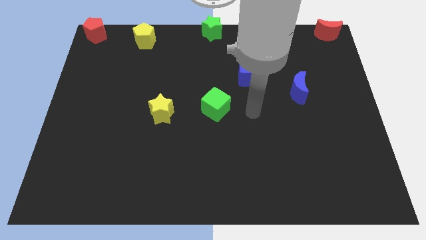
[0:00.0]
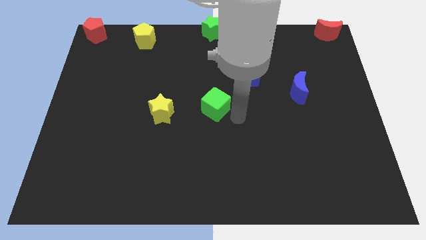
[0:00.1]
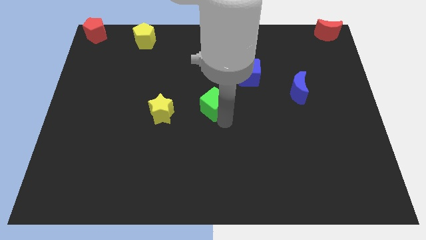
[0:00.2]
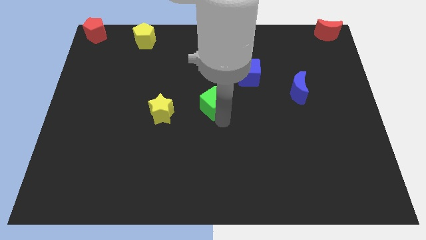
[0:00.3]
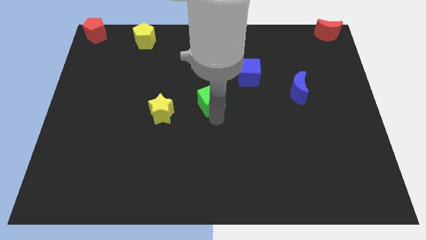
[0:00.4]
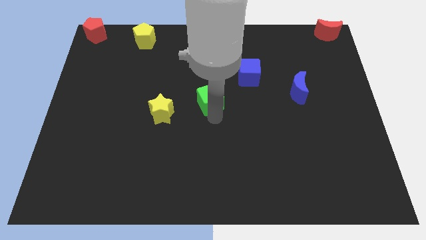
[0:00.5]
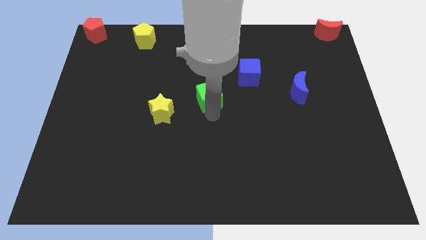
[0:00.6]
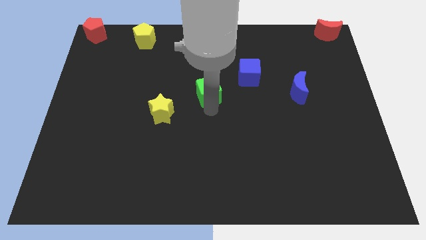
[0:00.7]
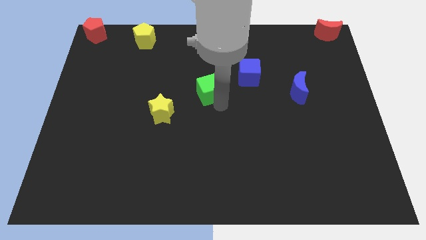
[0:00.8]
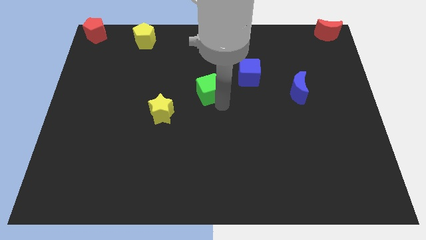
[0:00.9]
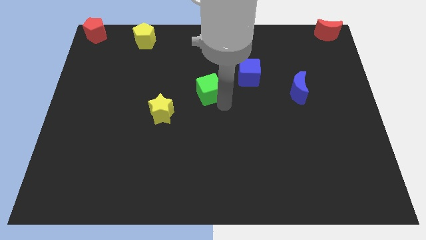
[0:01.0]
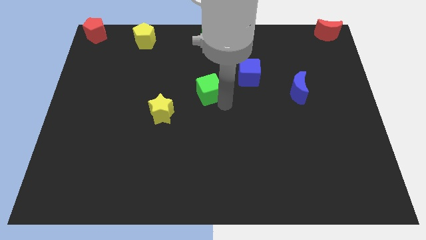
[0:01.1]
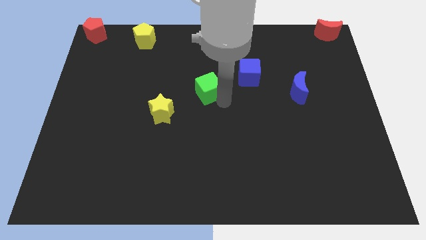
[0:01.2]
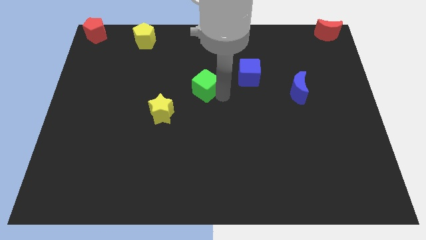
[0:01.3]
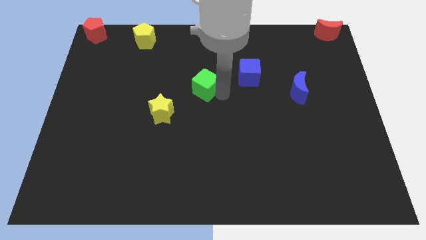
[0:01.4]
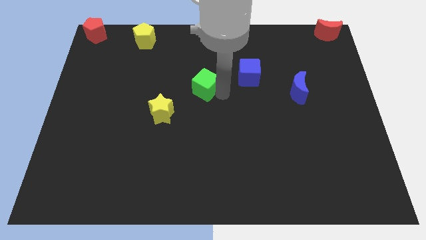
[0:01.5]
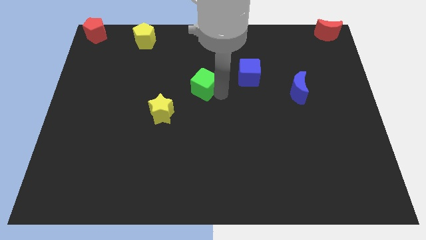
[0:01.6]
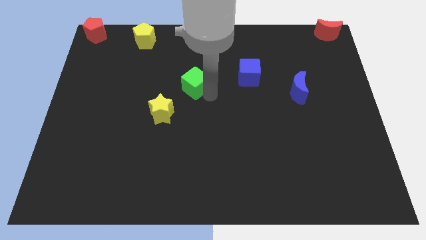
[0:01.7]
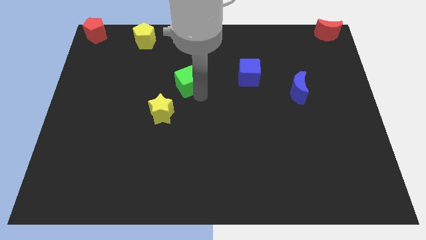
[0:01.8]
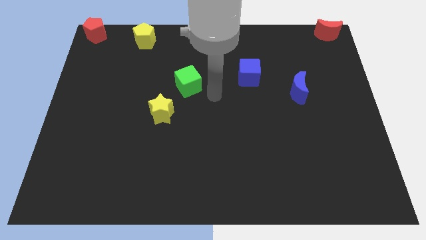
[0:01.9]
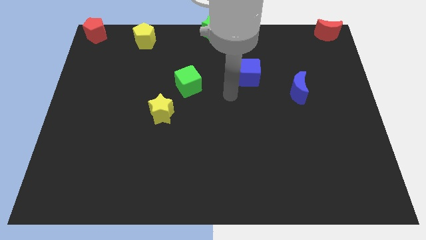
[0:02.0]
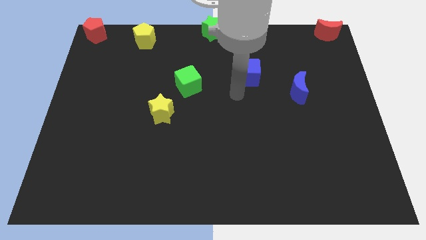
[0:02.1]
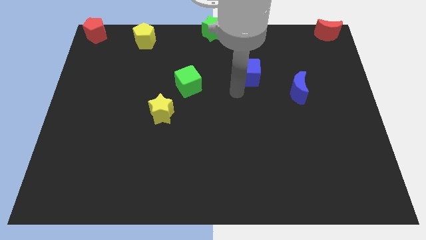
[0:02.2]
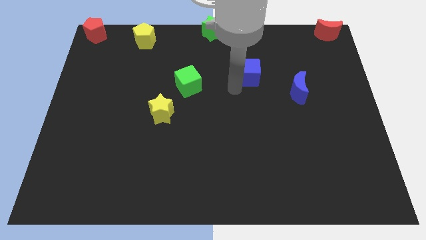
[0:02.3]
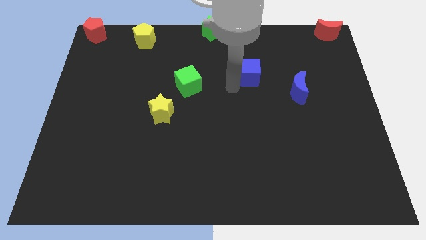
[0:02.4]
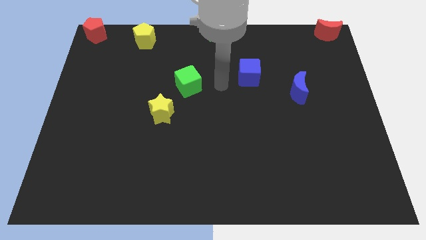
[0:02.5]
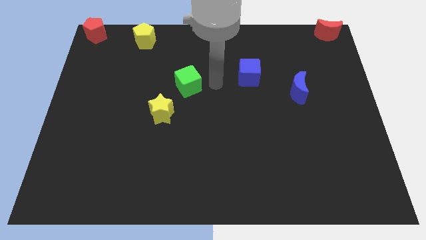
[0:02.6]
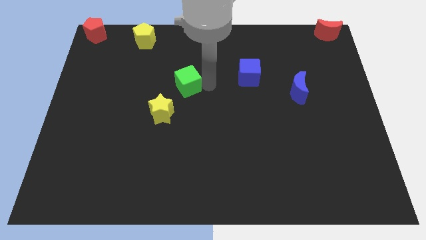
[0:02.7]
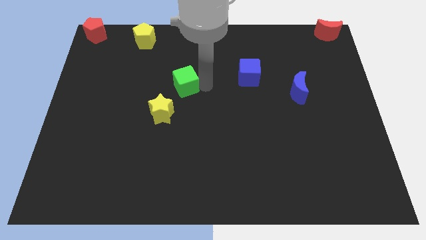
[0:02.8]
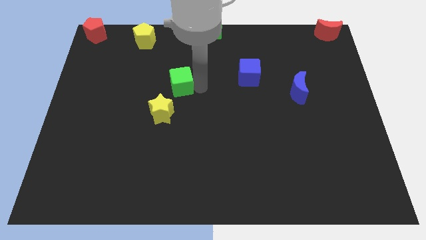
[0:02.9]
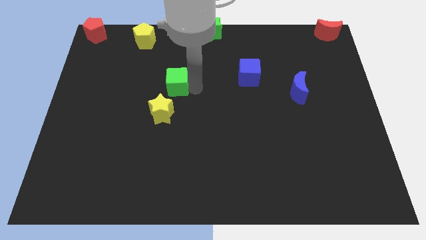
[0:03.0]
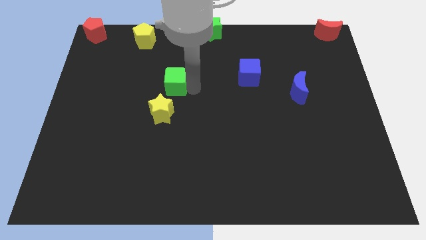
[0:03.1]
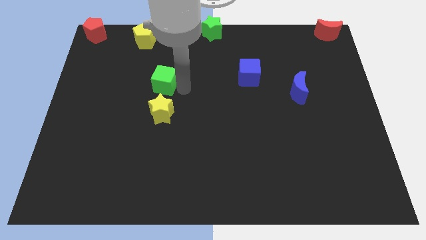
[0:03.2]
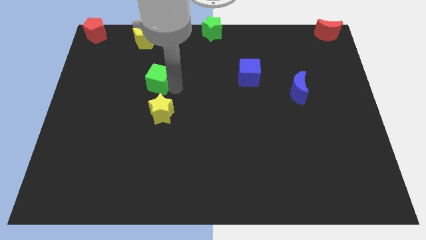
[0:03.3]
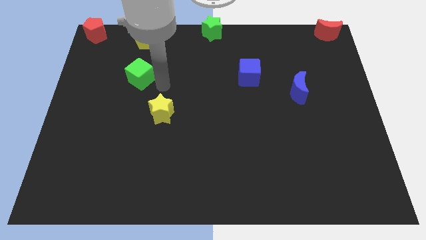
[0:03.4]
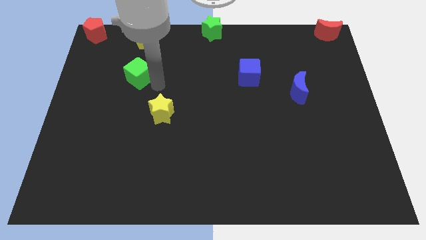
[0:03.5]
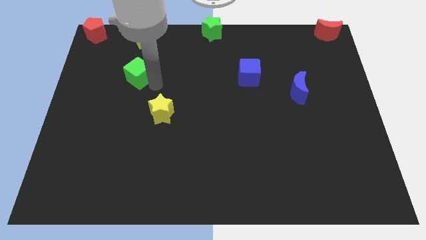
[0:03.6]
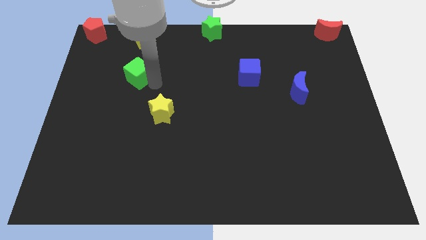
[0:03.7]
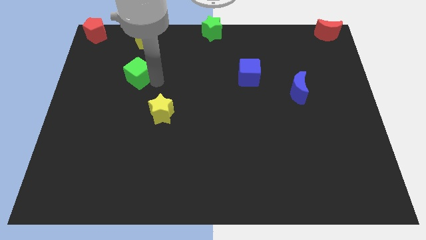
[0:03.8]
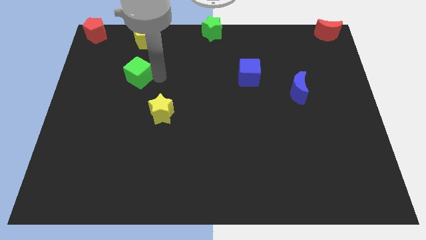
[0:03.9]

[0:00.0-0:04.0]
push the green cube to the bottom side of the yellow pentagon

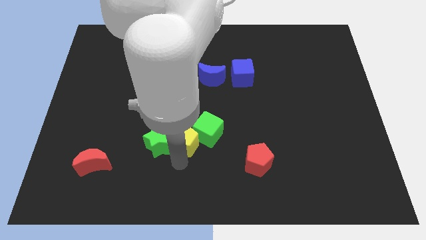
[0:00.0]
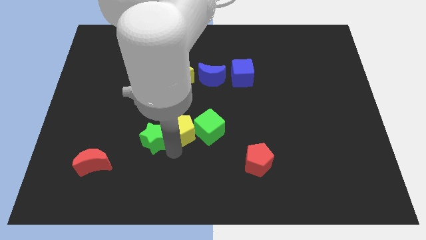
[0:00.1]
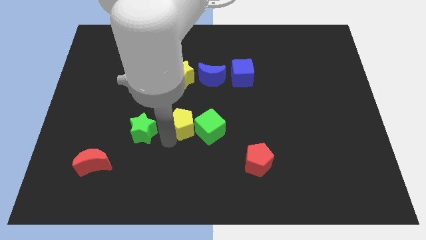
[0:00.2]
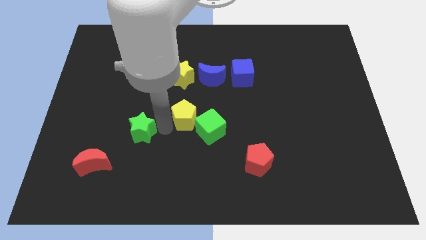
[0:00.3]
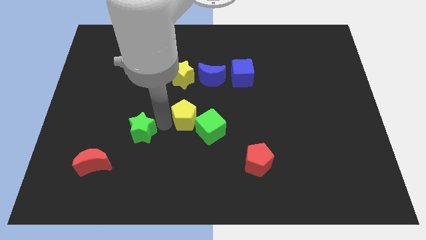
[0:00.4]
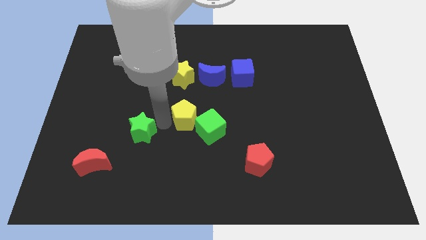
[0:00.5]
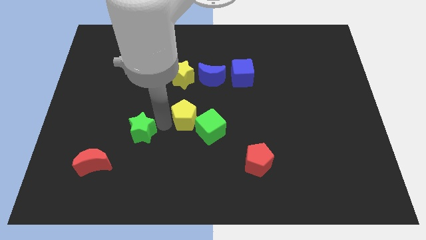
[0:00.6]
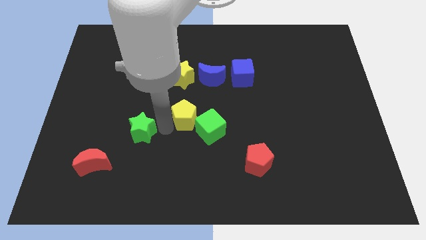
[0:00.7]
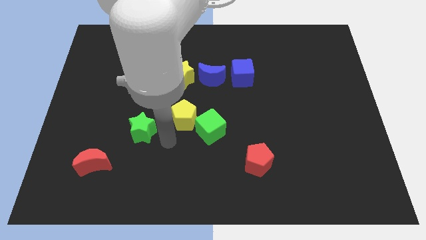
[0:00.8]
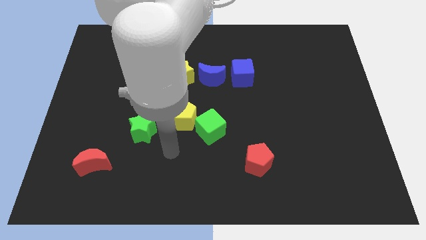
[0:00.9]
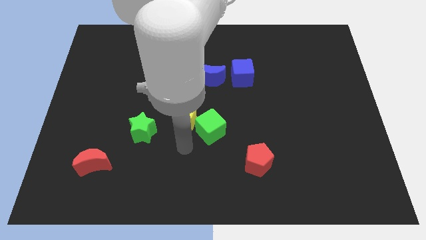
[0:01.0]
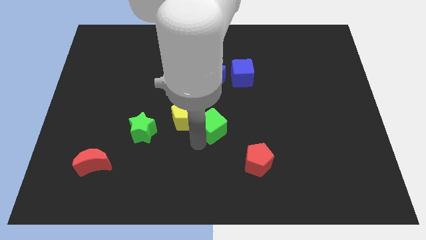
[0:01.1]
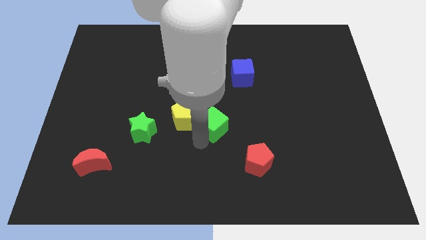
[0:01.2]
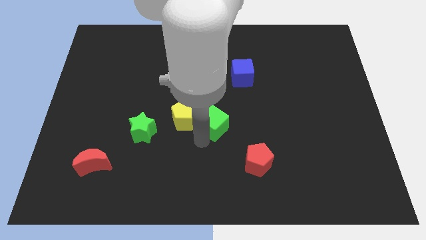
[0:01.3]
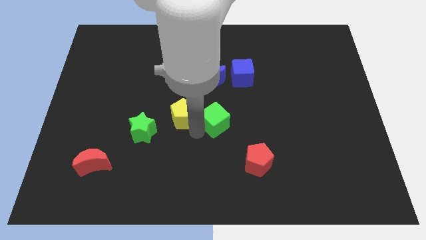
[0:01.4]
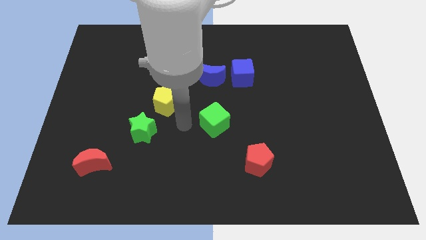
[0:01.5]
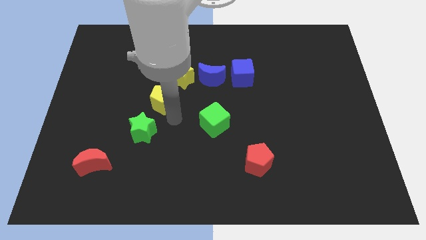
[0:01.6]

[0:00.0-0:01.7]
move the yellow pentagon to the top right side of the green star

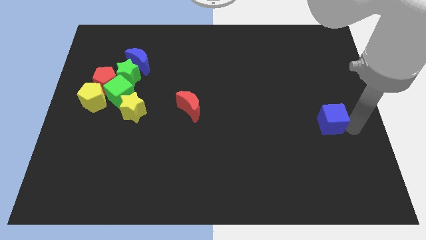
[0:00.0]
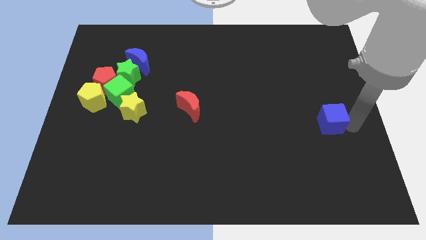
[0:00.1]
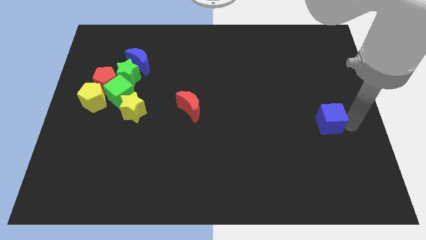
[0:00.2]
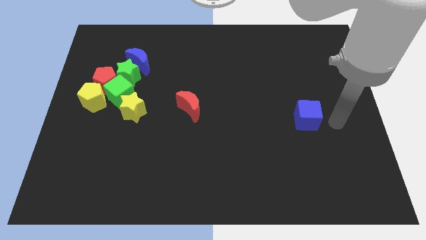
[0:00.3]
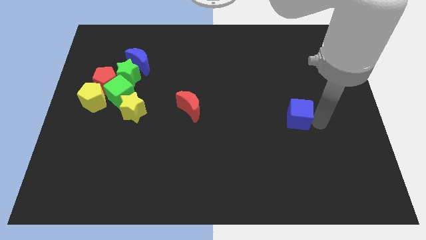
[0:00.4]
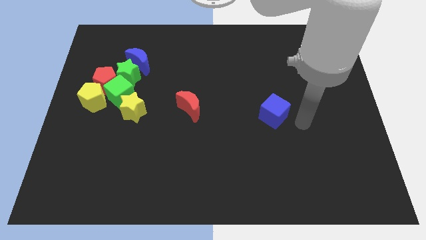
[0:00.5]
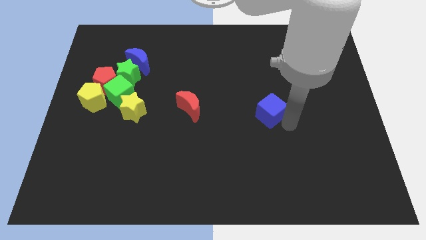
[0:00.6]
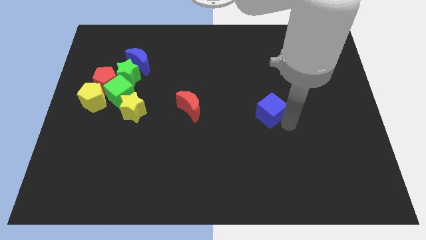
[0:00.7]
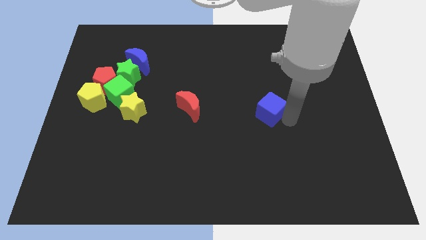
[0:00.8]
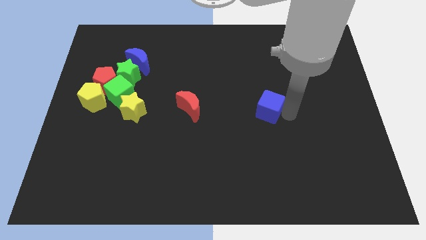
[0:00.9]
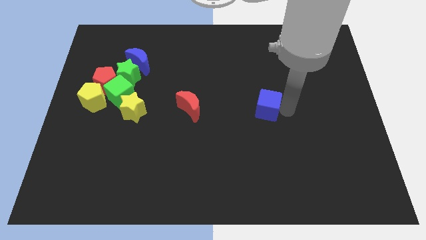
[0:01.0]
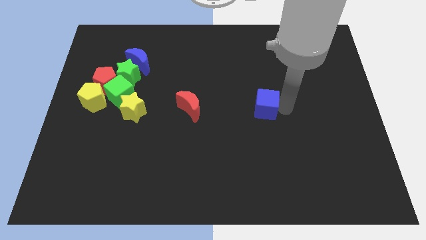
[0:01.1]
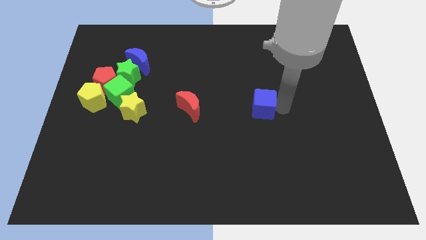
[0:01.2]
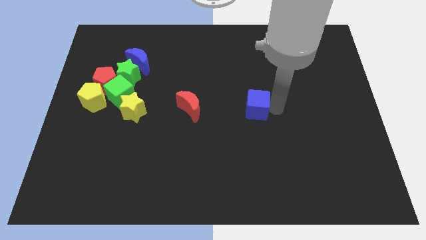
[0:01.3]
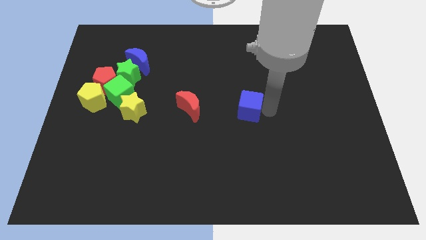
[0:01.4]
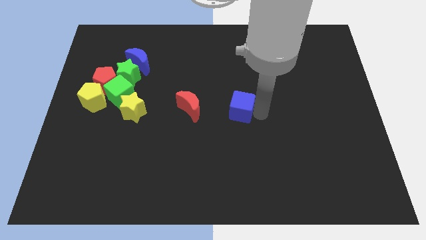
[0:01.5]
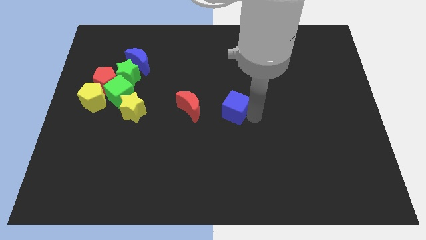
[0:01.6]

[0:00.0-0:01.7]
push the blue cube close to the right of the red crescent

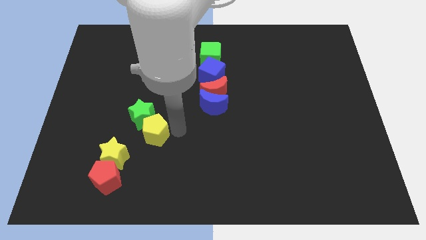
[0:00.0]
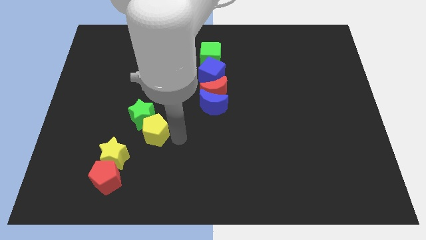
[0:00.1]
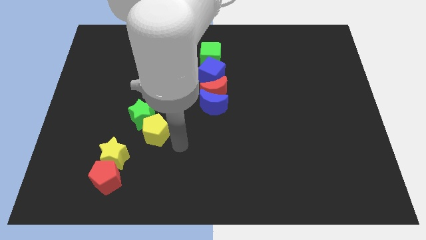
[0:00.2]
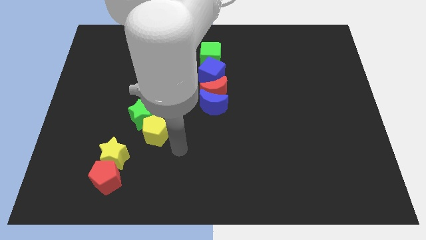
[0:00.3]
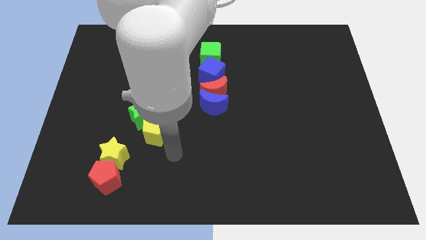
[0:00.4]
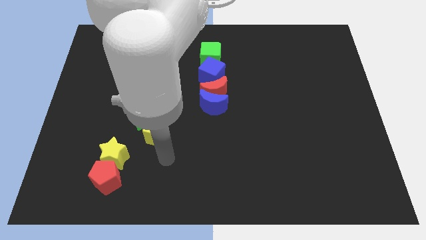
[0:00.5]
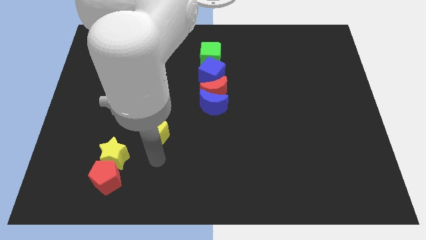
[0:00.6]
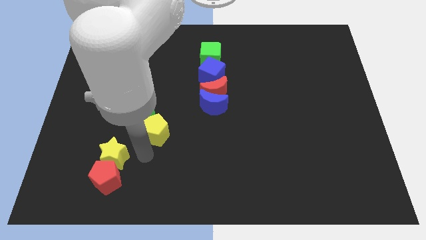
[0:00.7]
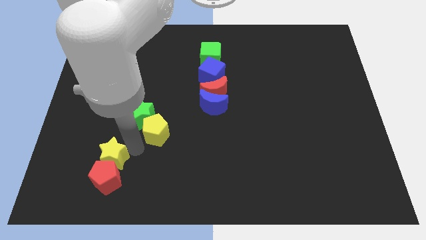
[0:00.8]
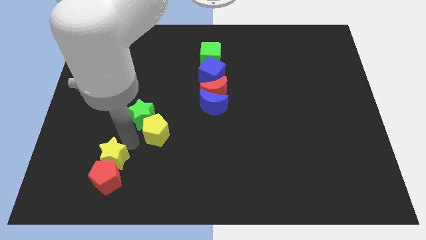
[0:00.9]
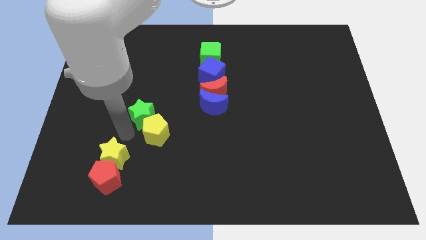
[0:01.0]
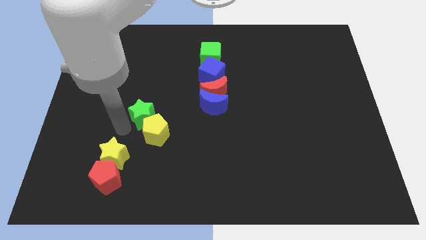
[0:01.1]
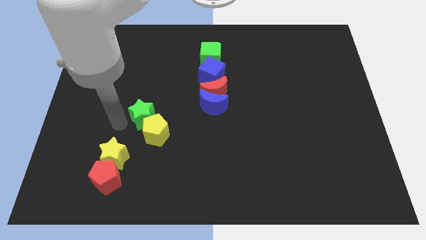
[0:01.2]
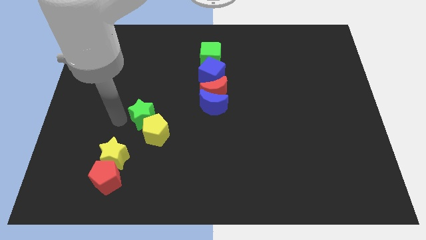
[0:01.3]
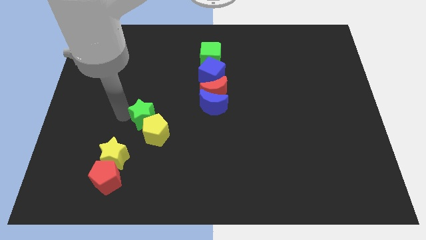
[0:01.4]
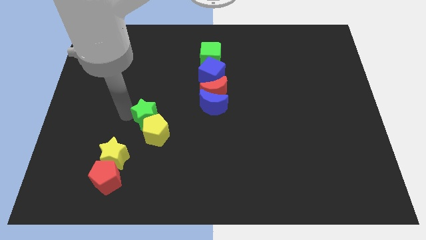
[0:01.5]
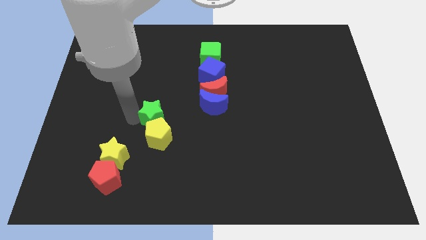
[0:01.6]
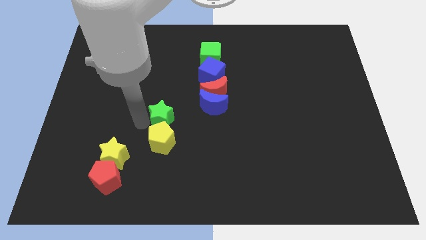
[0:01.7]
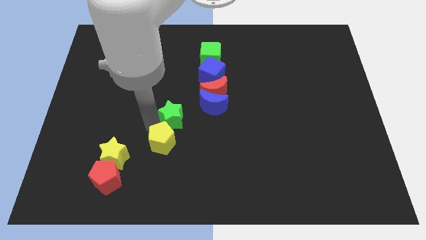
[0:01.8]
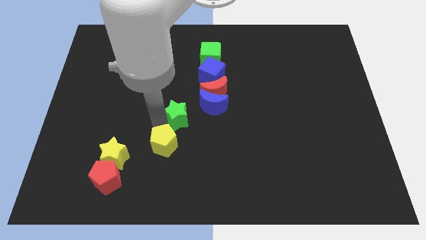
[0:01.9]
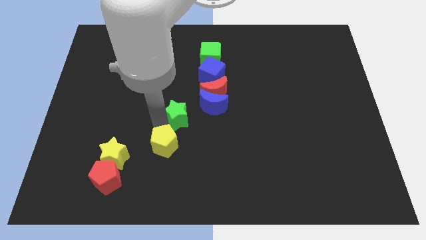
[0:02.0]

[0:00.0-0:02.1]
move green star along with yellow pentagon
